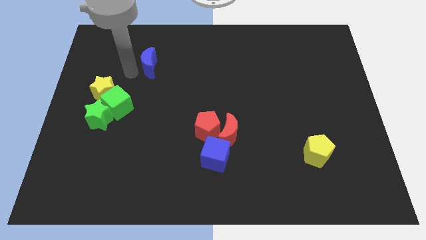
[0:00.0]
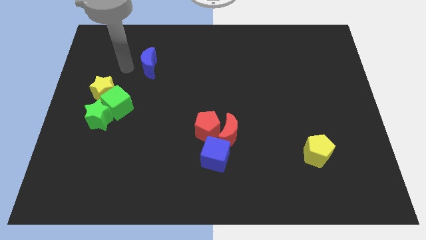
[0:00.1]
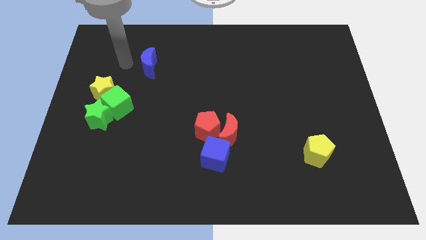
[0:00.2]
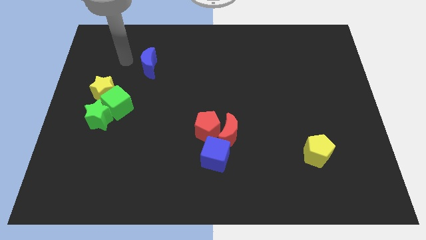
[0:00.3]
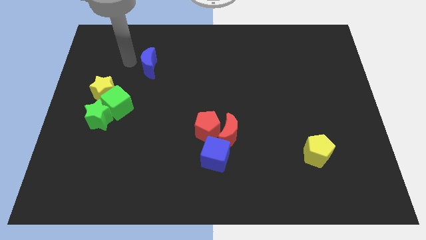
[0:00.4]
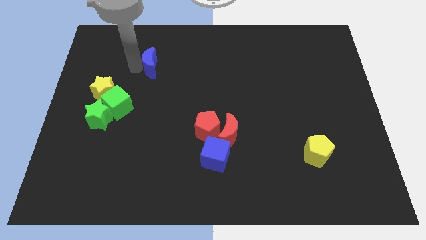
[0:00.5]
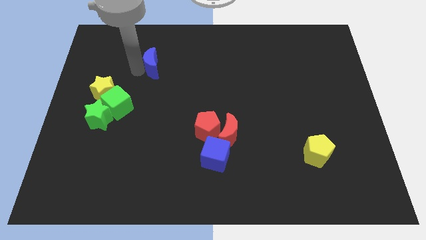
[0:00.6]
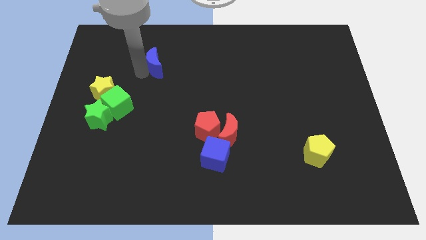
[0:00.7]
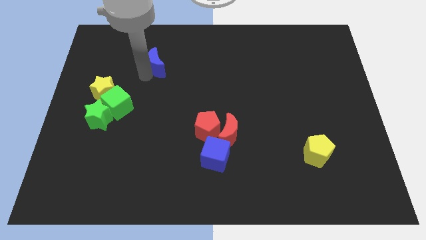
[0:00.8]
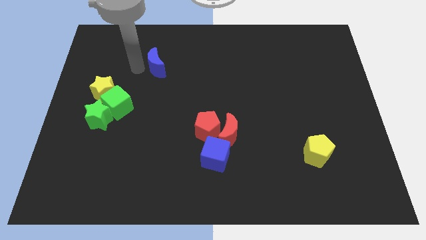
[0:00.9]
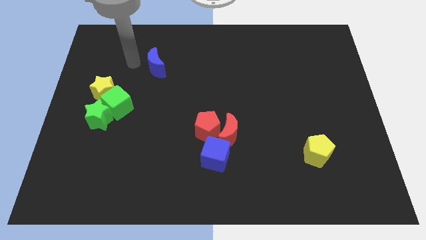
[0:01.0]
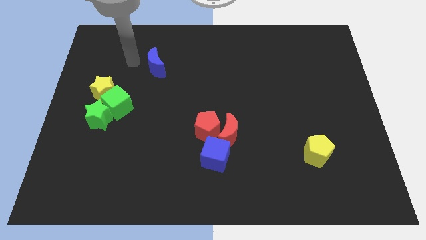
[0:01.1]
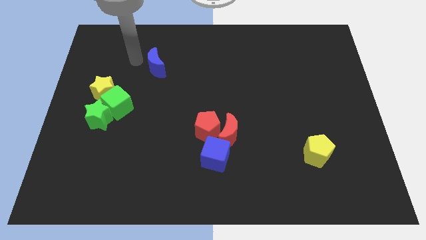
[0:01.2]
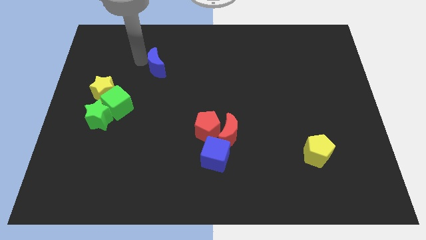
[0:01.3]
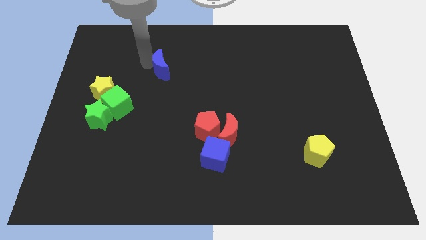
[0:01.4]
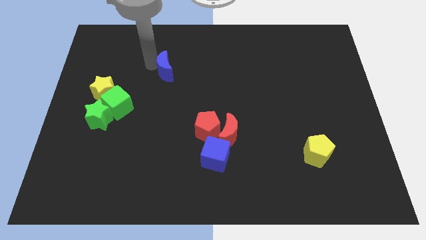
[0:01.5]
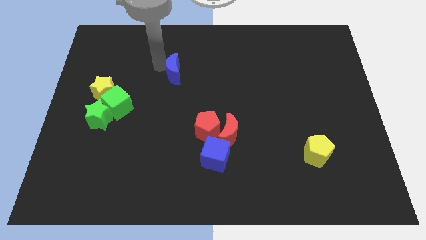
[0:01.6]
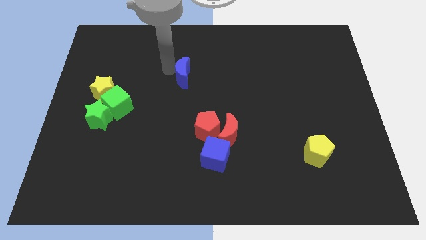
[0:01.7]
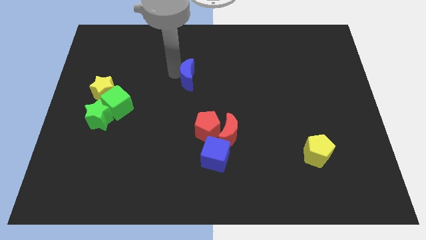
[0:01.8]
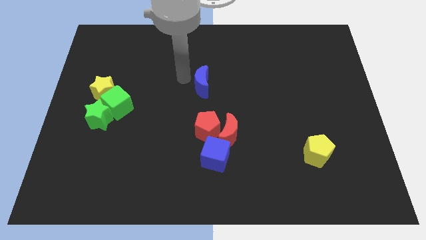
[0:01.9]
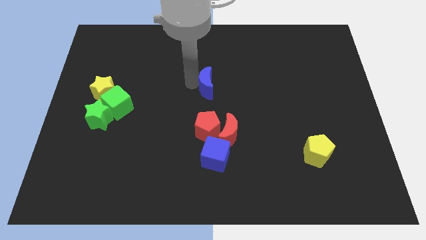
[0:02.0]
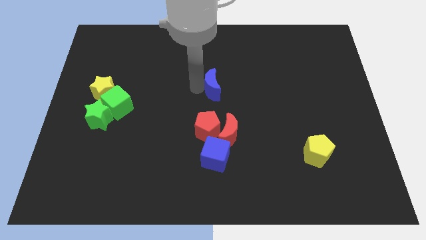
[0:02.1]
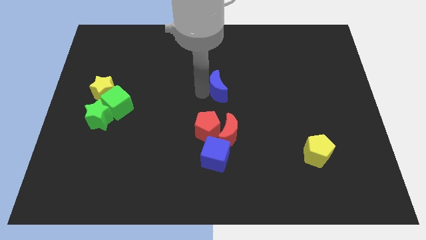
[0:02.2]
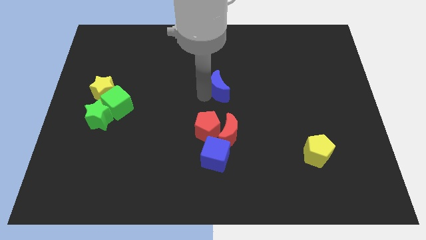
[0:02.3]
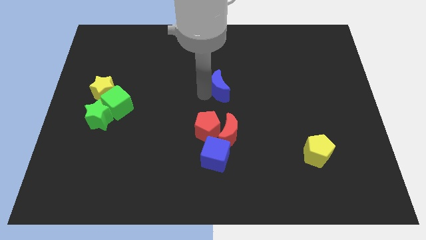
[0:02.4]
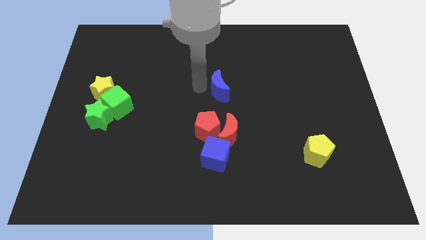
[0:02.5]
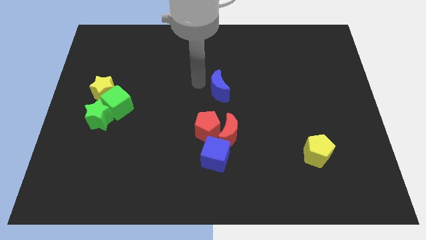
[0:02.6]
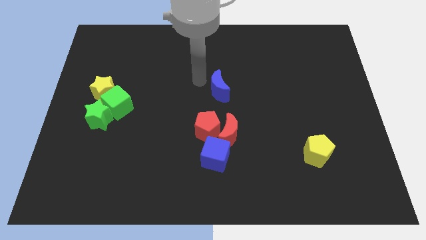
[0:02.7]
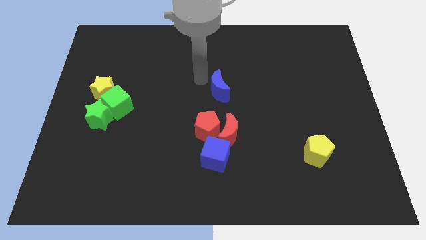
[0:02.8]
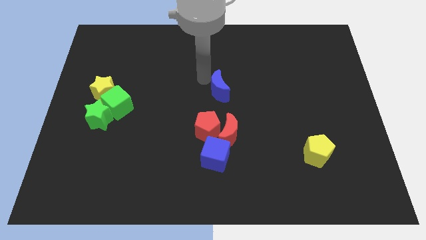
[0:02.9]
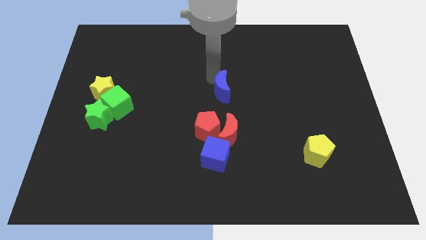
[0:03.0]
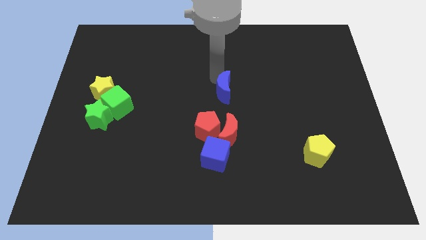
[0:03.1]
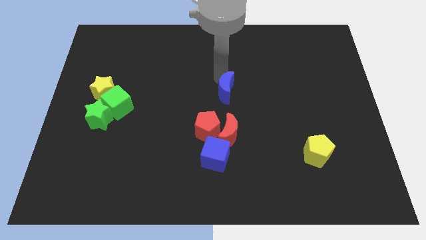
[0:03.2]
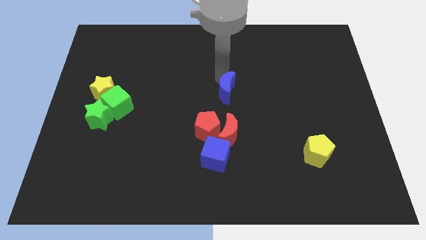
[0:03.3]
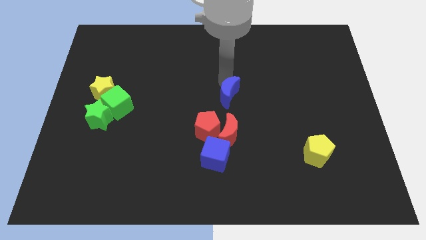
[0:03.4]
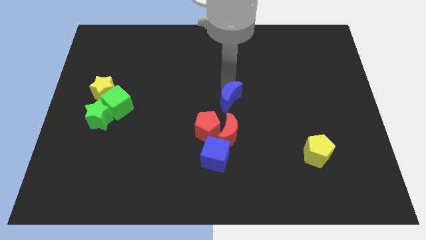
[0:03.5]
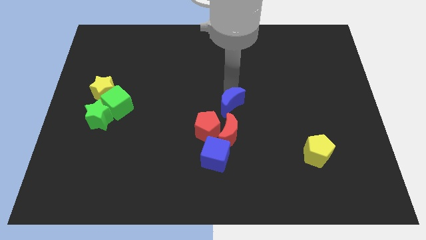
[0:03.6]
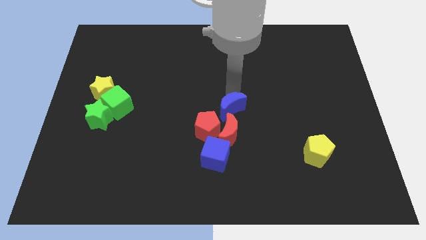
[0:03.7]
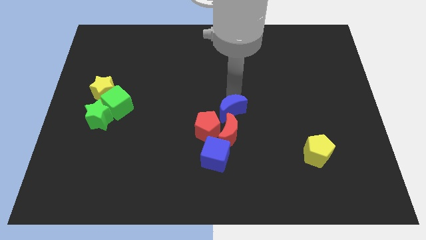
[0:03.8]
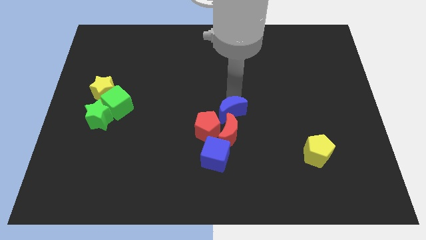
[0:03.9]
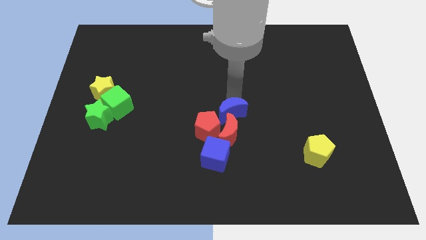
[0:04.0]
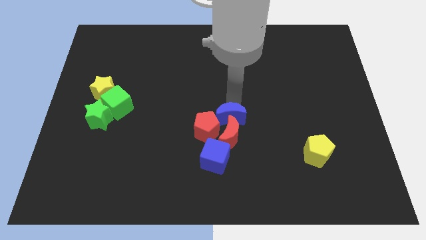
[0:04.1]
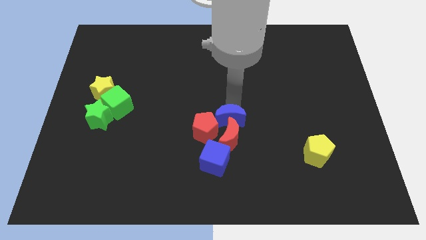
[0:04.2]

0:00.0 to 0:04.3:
put the blue crescent to the top side of the red crescent

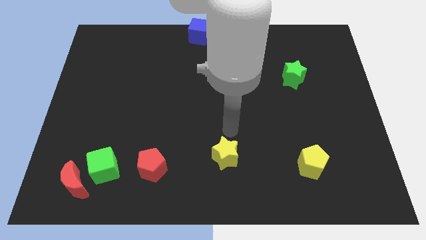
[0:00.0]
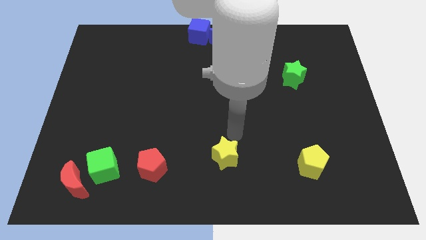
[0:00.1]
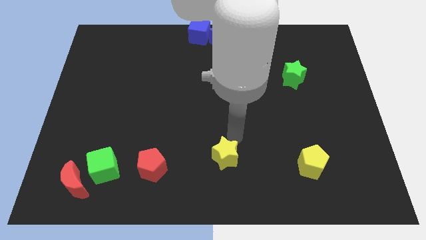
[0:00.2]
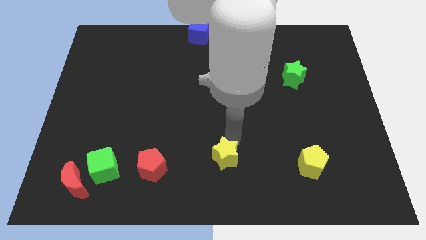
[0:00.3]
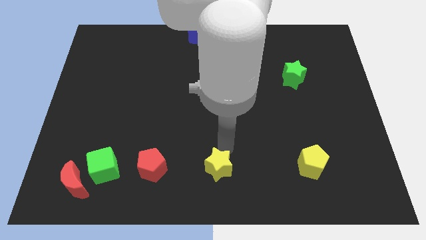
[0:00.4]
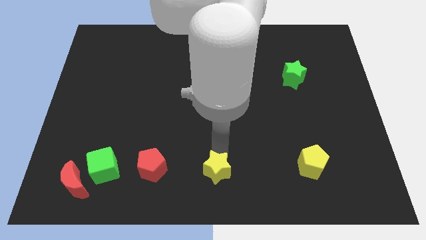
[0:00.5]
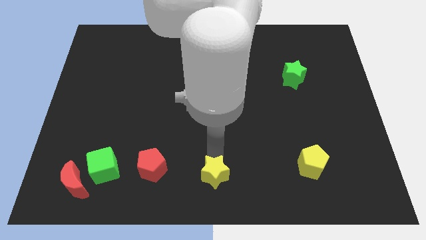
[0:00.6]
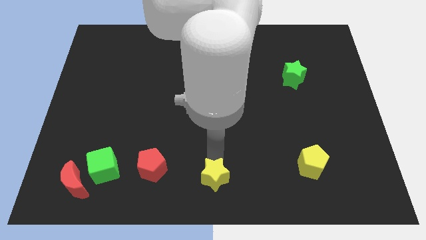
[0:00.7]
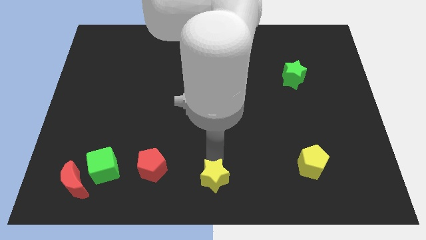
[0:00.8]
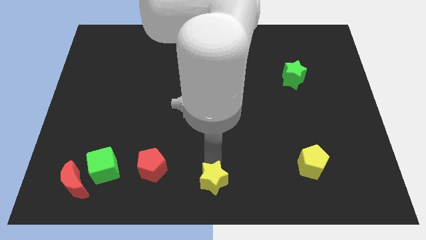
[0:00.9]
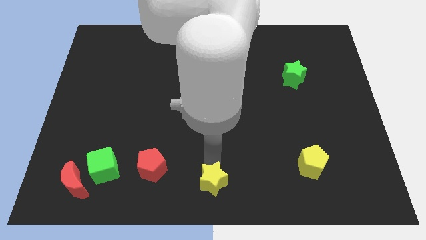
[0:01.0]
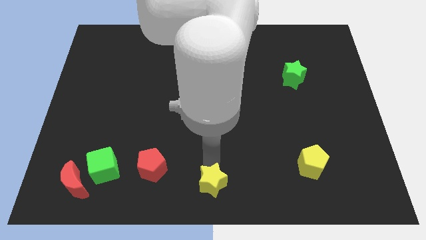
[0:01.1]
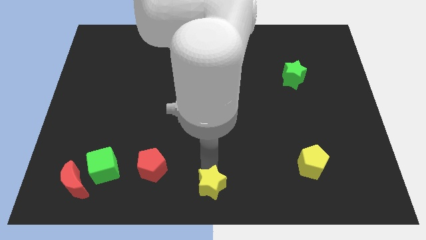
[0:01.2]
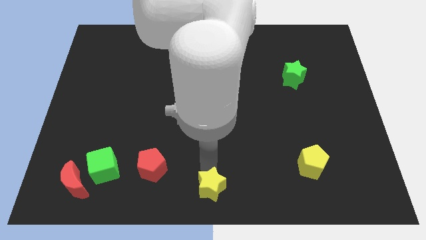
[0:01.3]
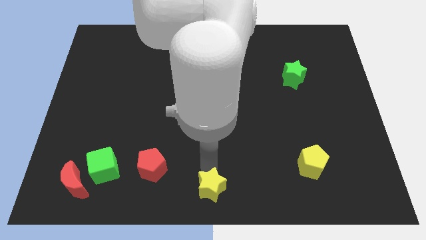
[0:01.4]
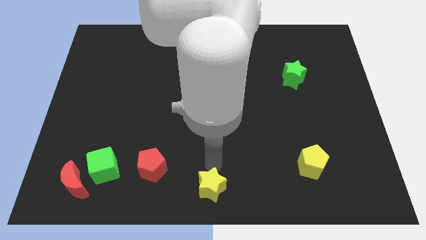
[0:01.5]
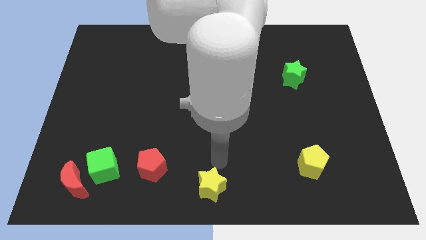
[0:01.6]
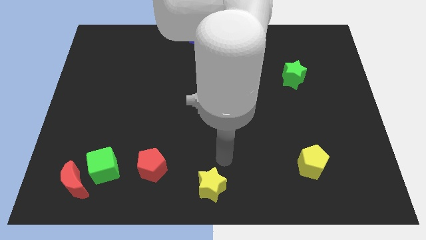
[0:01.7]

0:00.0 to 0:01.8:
move the yellow star to the bottom center

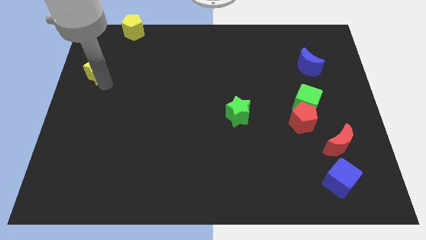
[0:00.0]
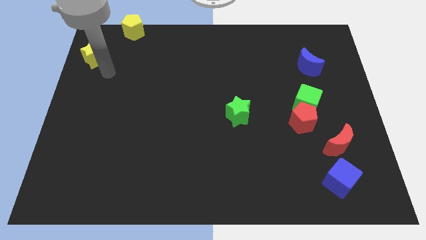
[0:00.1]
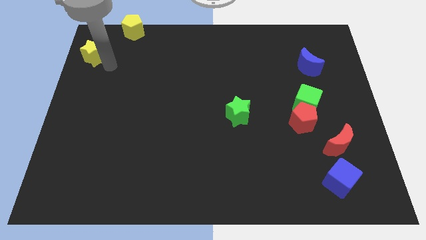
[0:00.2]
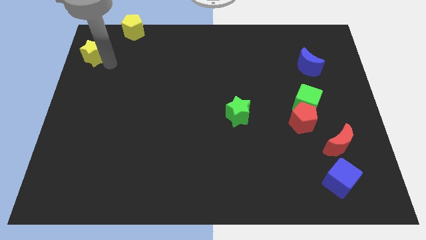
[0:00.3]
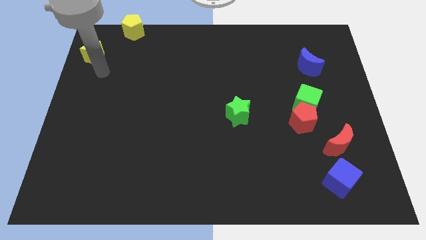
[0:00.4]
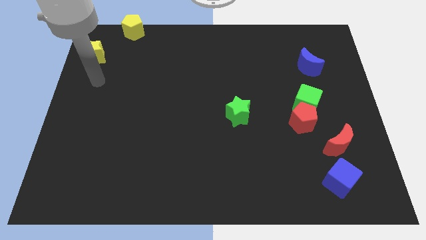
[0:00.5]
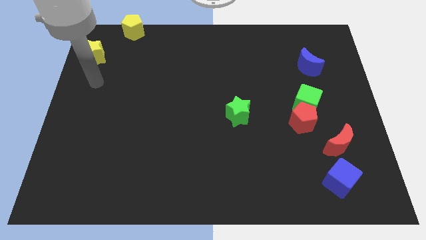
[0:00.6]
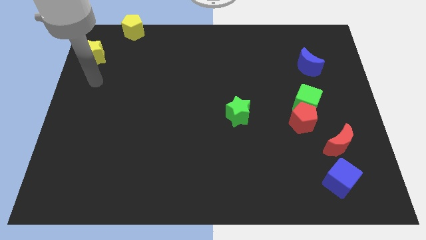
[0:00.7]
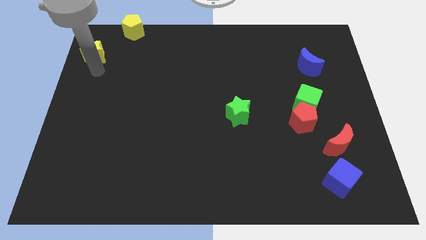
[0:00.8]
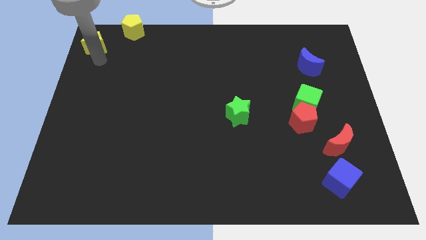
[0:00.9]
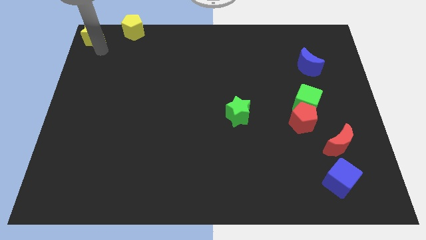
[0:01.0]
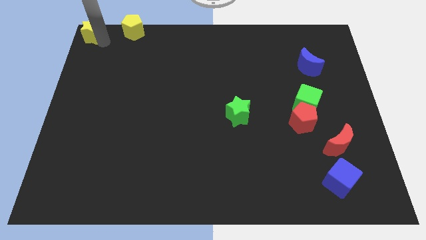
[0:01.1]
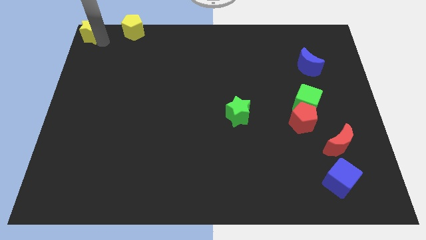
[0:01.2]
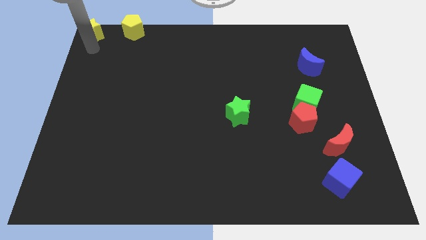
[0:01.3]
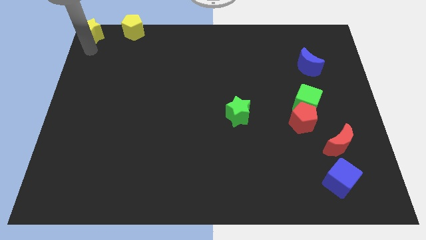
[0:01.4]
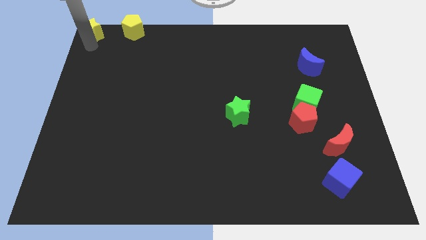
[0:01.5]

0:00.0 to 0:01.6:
put the yellow star at the top left corner of the board

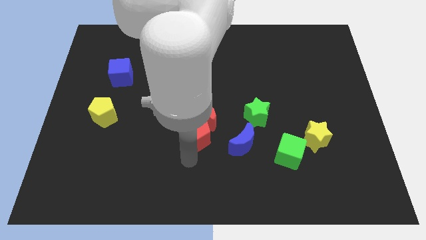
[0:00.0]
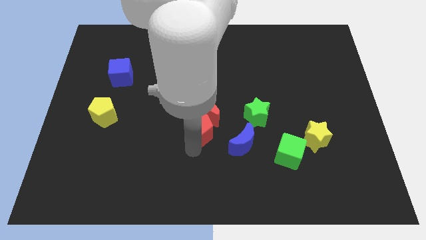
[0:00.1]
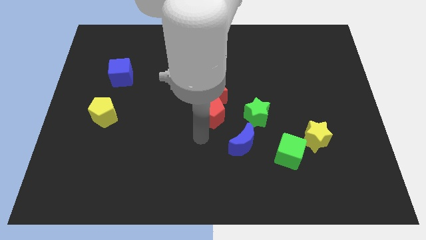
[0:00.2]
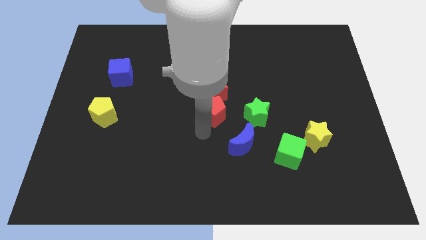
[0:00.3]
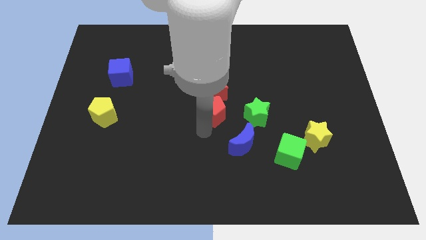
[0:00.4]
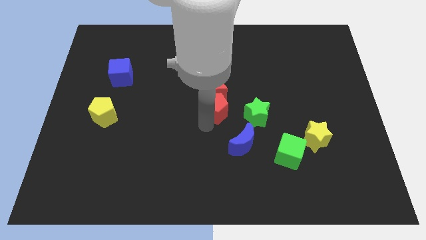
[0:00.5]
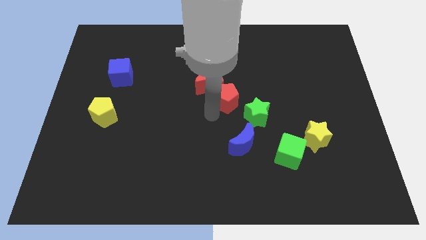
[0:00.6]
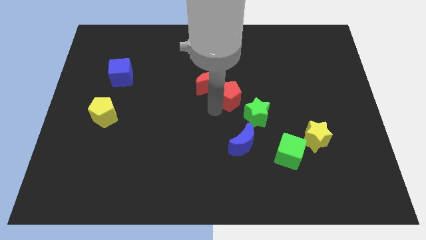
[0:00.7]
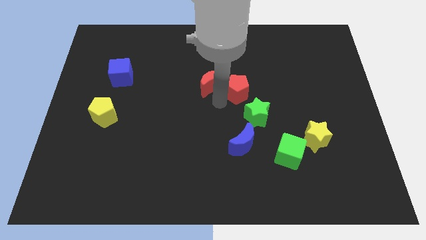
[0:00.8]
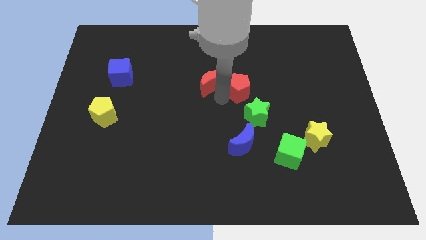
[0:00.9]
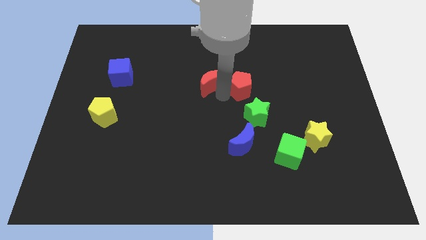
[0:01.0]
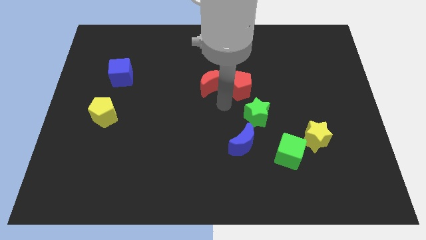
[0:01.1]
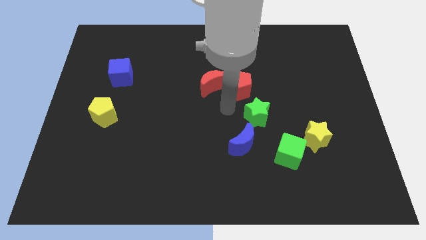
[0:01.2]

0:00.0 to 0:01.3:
push the red pentagon to the right of the red crescent
